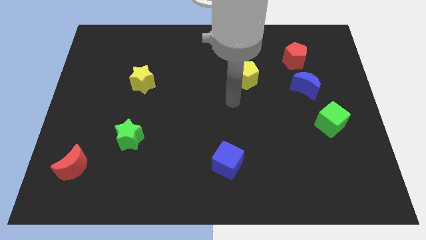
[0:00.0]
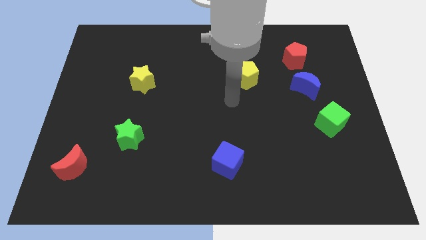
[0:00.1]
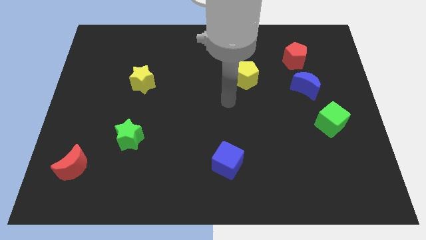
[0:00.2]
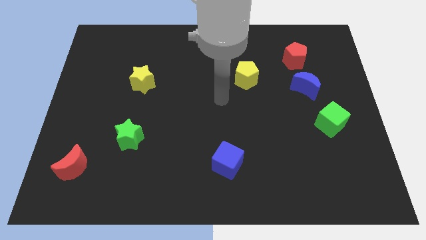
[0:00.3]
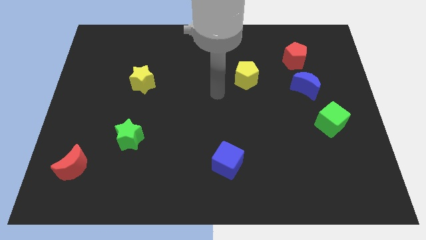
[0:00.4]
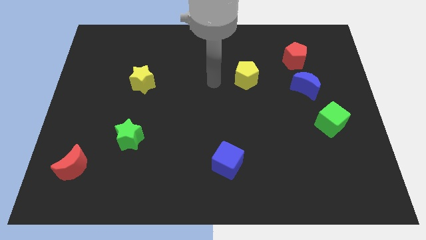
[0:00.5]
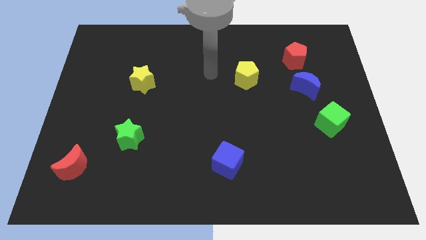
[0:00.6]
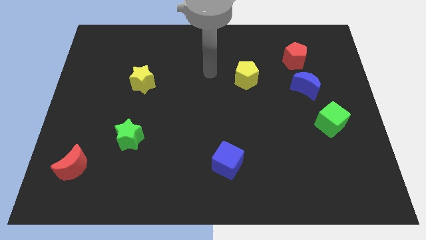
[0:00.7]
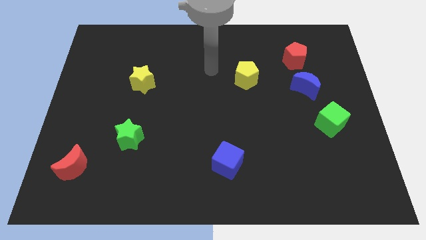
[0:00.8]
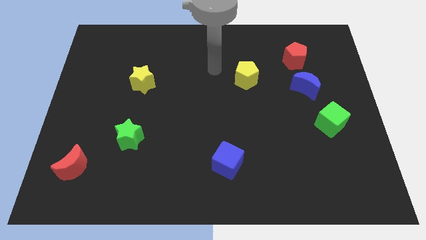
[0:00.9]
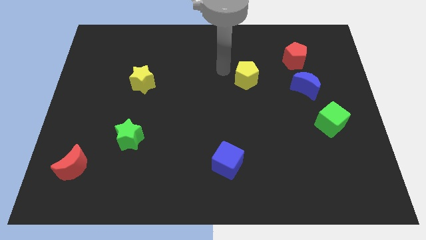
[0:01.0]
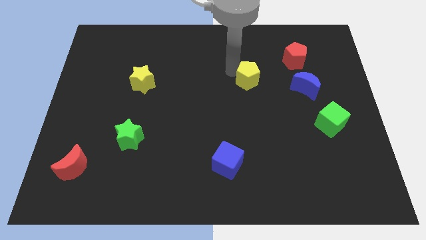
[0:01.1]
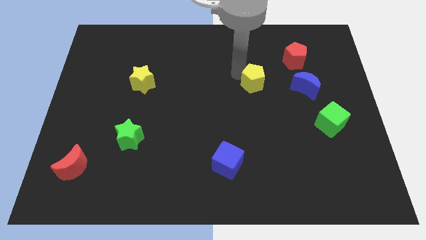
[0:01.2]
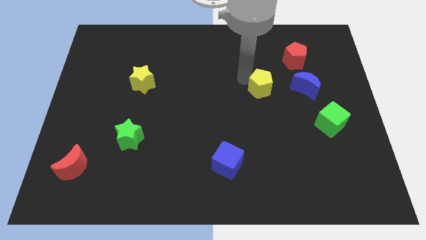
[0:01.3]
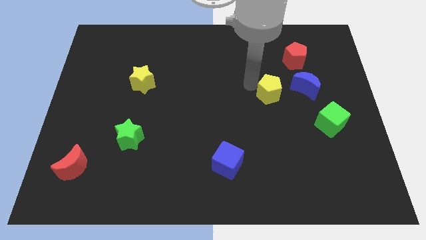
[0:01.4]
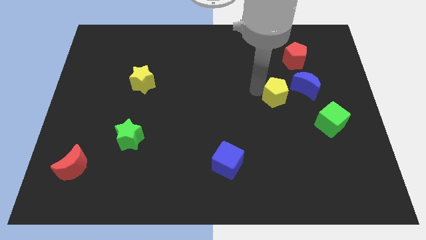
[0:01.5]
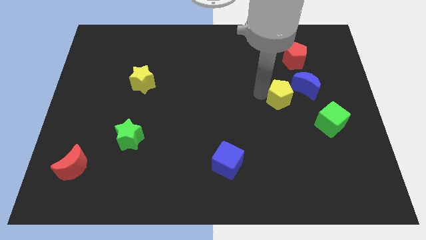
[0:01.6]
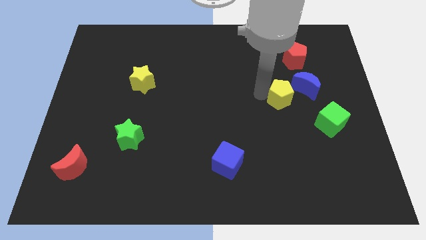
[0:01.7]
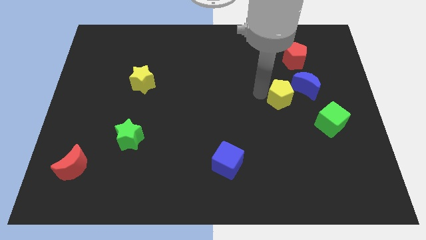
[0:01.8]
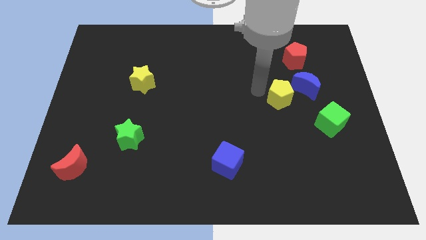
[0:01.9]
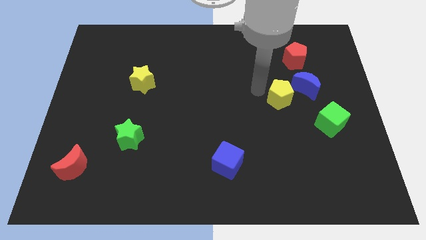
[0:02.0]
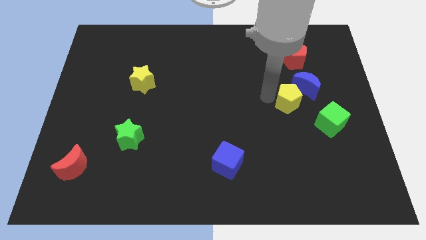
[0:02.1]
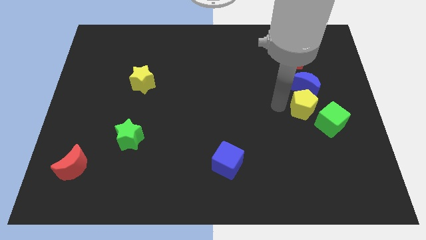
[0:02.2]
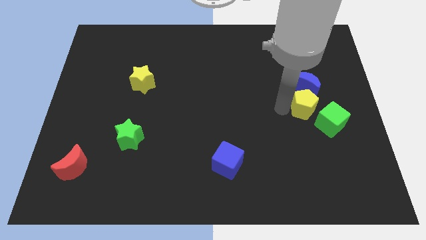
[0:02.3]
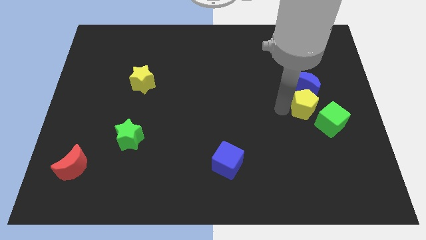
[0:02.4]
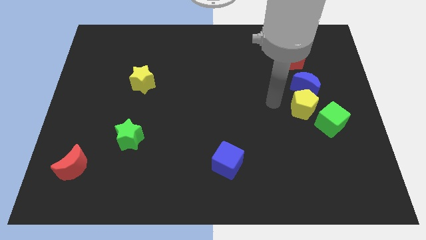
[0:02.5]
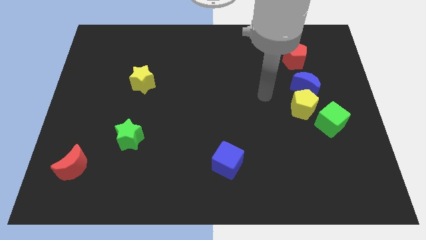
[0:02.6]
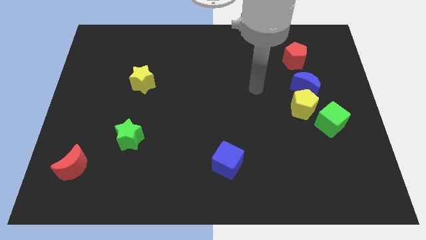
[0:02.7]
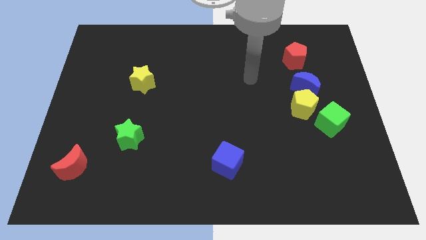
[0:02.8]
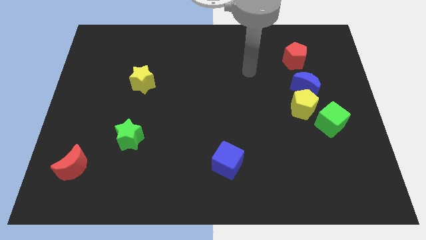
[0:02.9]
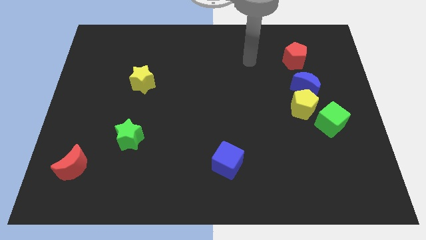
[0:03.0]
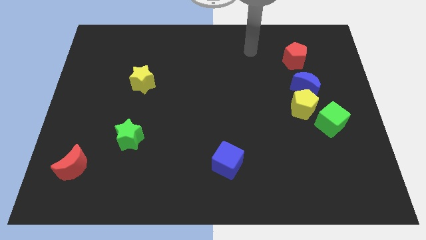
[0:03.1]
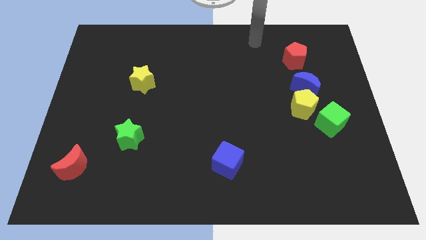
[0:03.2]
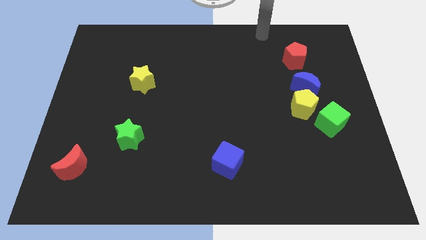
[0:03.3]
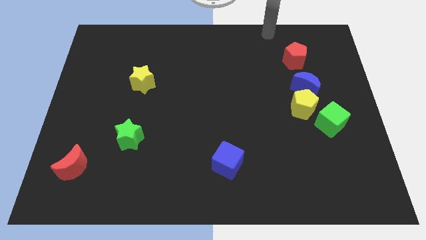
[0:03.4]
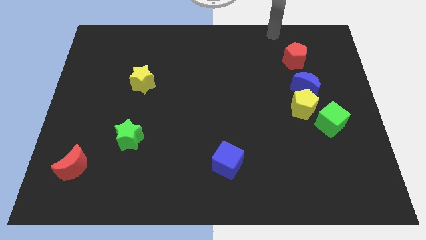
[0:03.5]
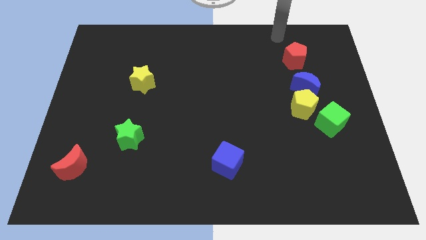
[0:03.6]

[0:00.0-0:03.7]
push the yellow pentagon to the top of the green cube

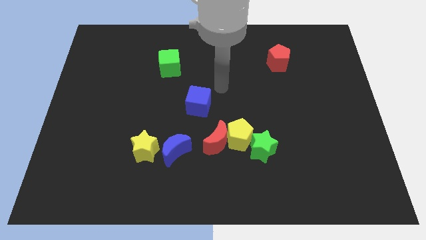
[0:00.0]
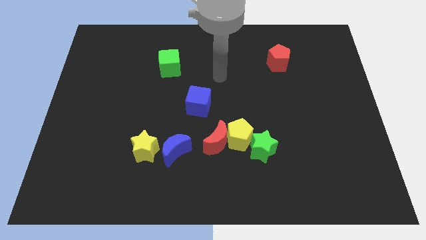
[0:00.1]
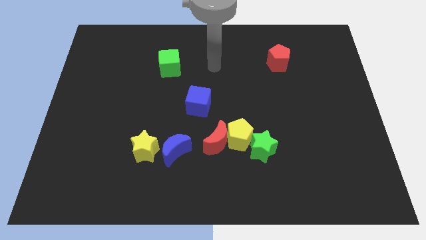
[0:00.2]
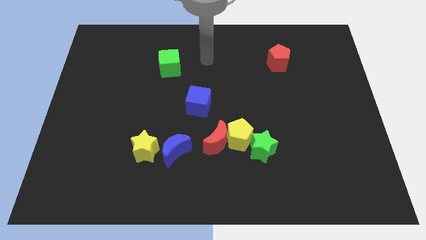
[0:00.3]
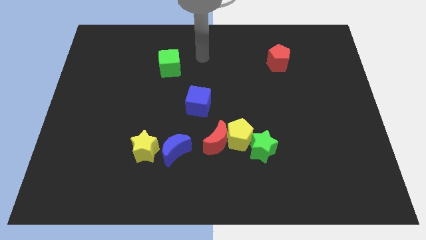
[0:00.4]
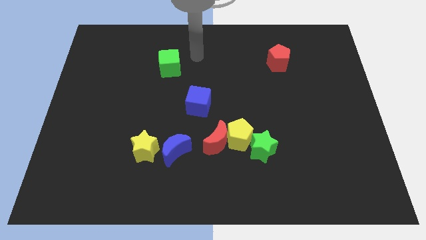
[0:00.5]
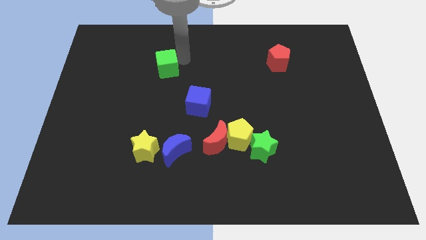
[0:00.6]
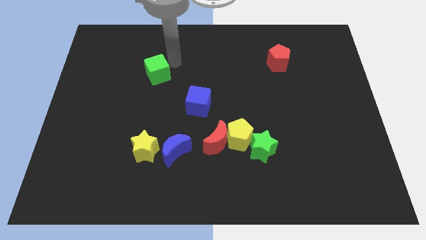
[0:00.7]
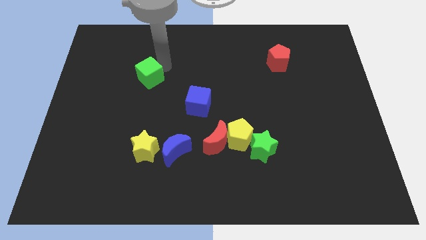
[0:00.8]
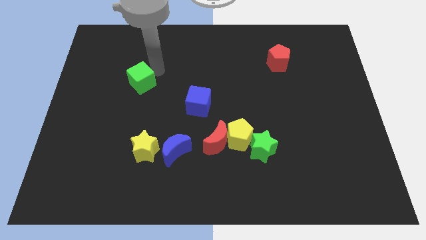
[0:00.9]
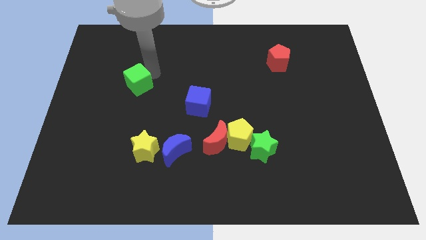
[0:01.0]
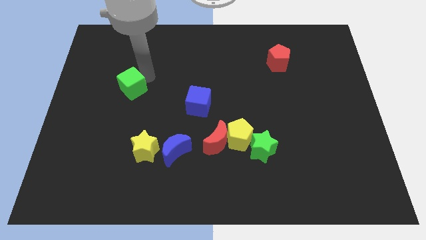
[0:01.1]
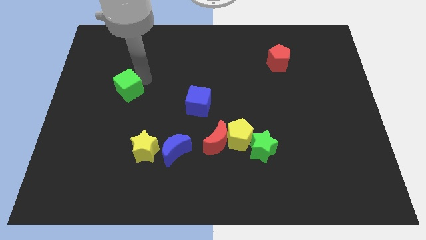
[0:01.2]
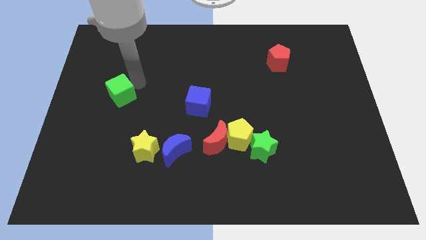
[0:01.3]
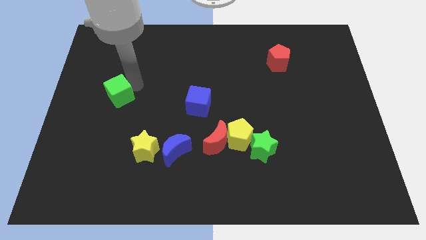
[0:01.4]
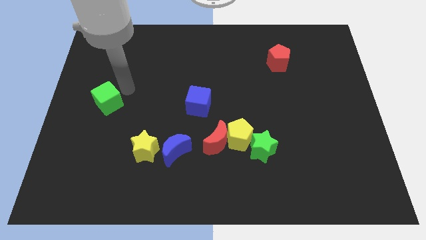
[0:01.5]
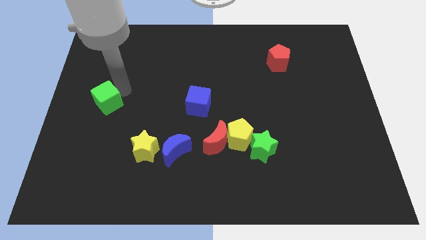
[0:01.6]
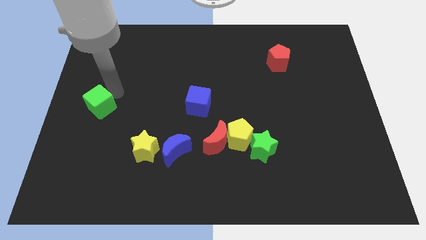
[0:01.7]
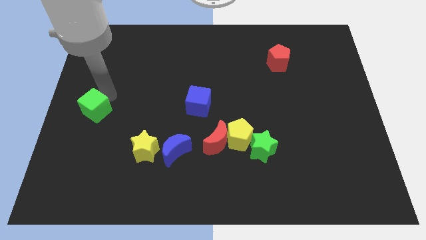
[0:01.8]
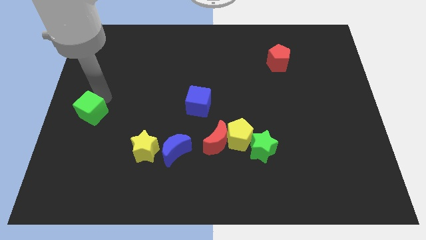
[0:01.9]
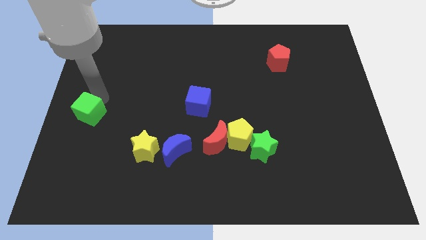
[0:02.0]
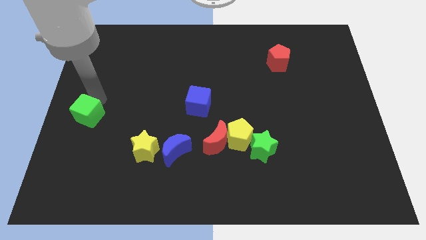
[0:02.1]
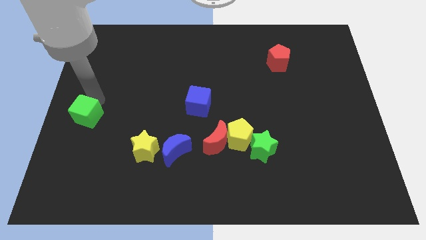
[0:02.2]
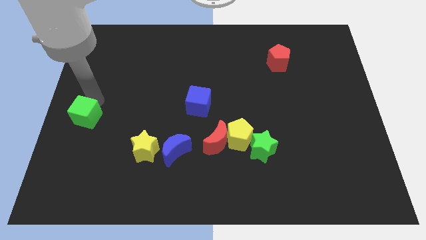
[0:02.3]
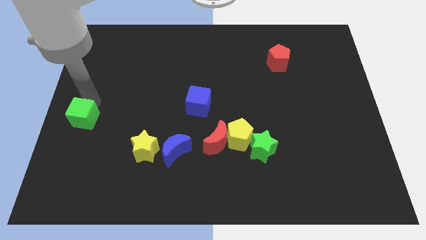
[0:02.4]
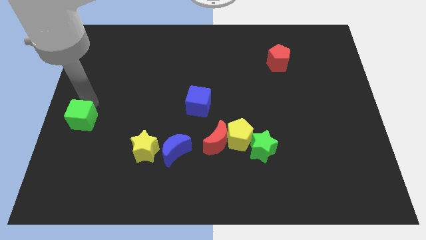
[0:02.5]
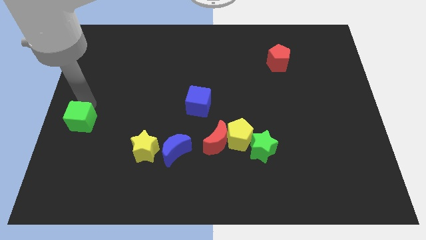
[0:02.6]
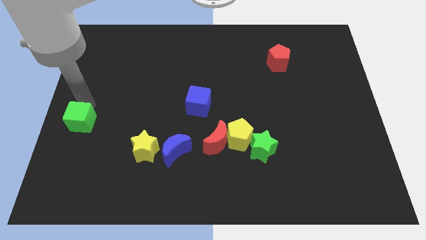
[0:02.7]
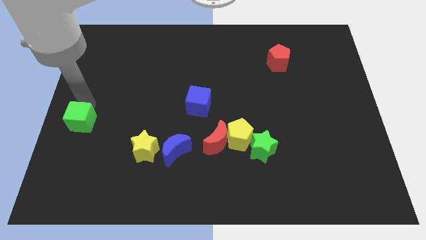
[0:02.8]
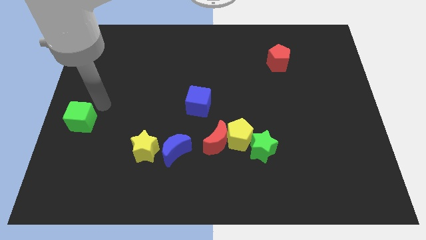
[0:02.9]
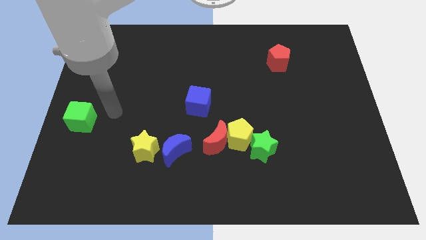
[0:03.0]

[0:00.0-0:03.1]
push the green cube towards the left side of the board

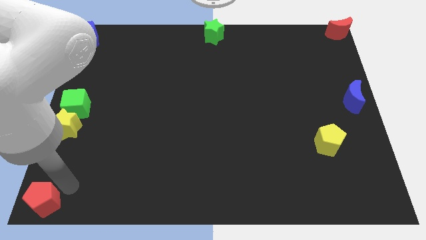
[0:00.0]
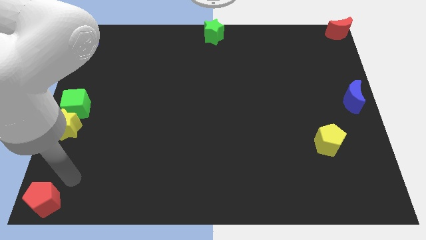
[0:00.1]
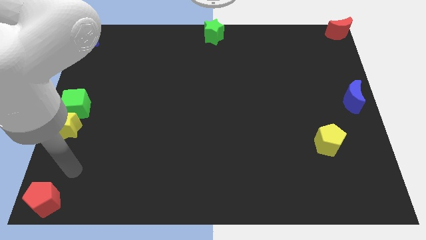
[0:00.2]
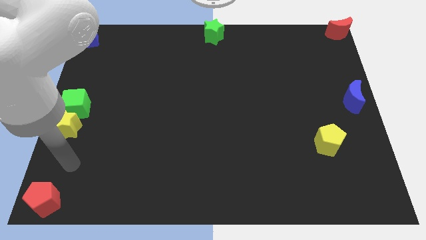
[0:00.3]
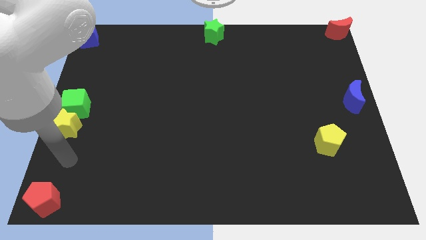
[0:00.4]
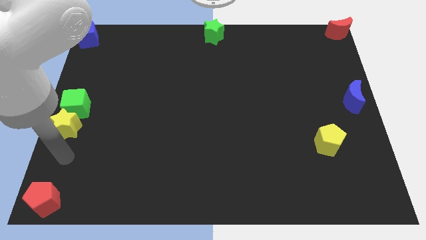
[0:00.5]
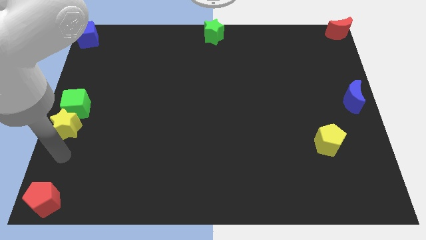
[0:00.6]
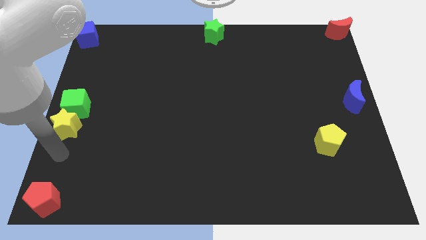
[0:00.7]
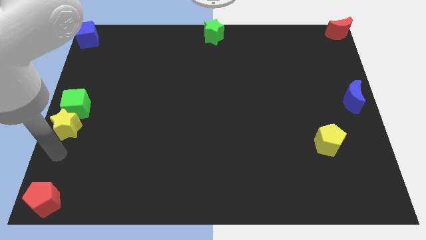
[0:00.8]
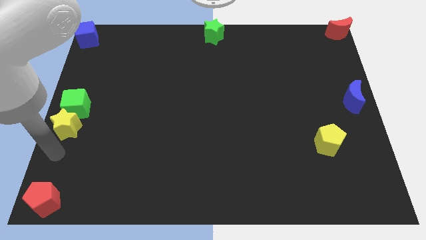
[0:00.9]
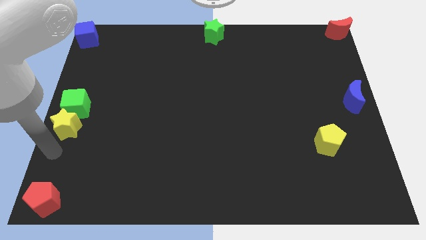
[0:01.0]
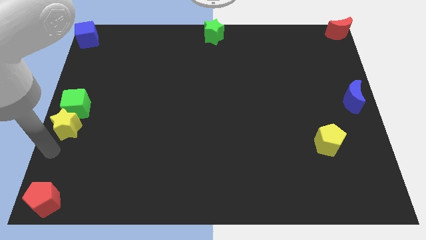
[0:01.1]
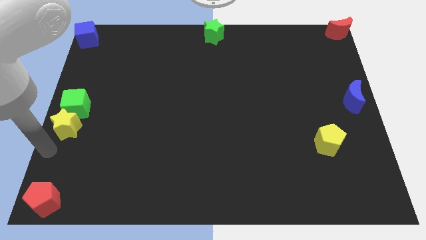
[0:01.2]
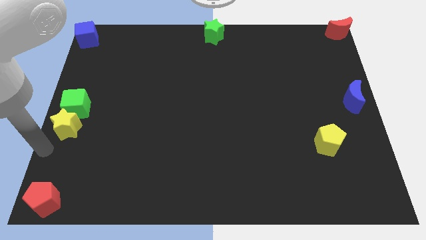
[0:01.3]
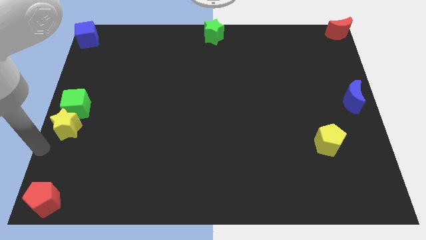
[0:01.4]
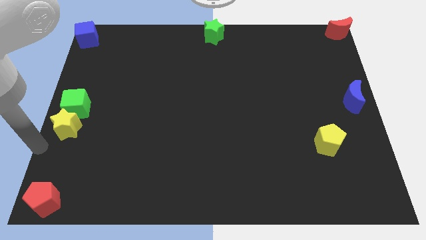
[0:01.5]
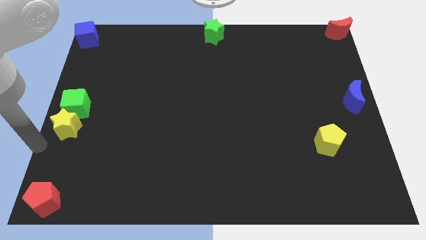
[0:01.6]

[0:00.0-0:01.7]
move the arm away from the red pentagon

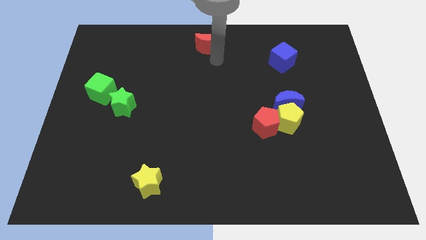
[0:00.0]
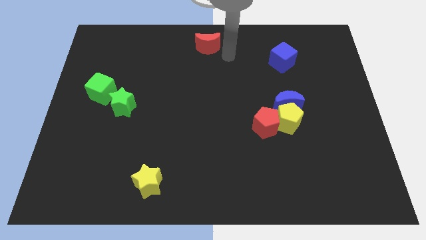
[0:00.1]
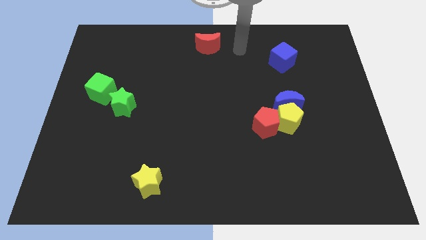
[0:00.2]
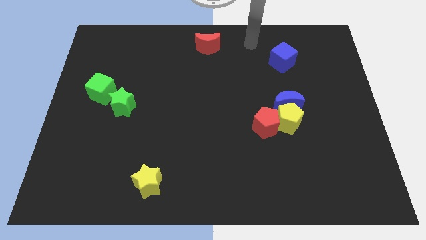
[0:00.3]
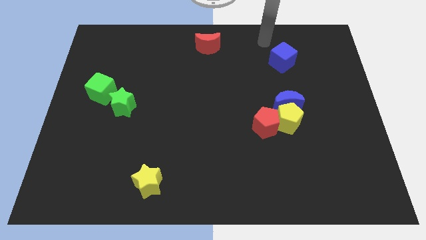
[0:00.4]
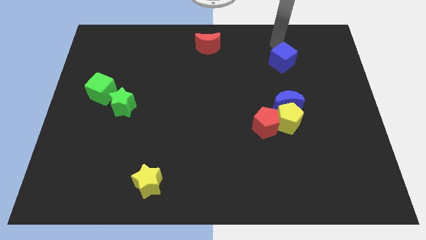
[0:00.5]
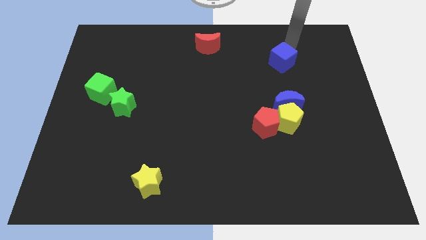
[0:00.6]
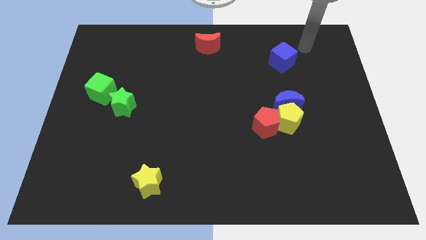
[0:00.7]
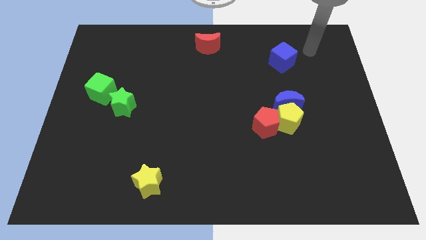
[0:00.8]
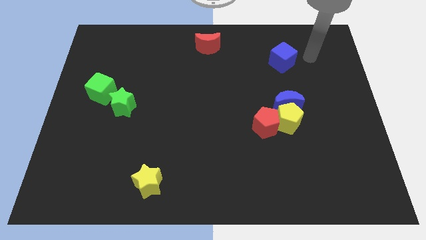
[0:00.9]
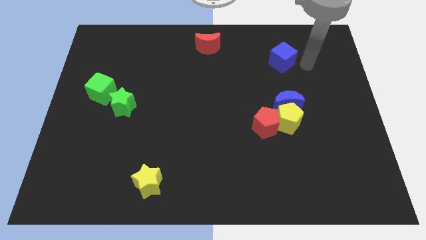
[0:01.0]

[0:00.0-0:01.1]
move your hand at the right side of the blue cube
